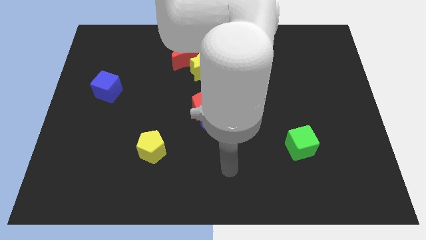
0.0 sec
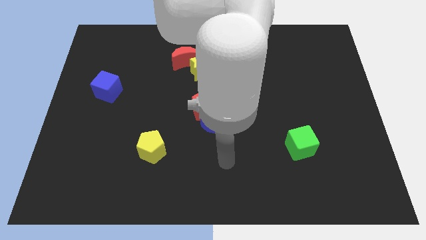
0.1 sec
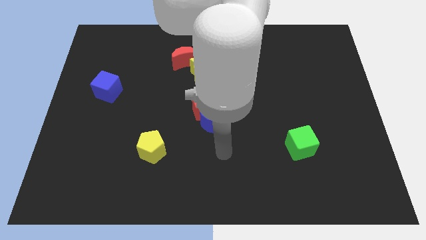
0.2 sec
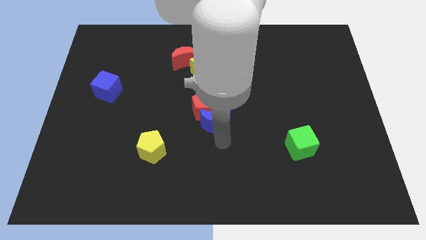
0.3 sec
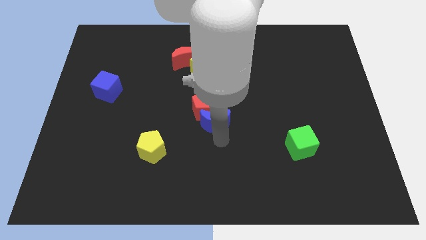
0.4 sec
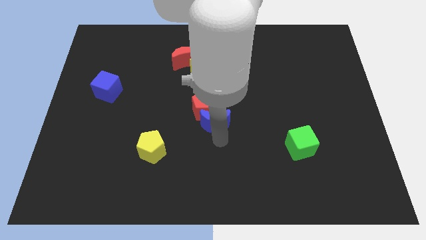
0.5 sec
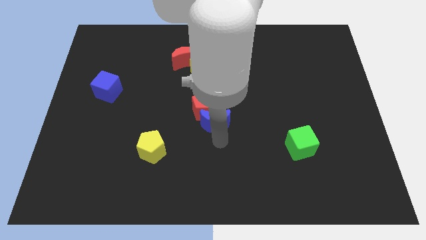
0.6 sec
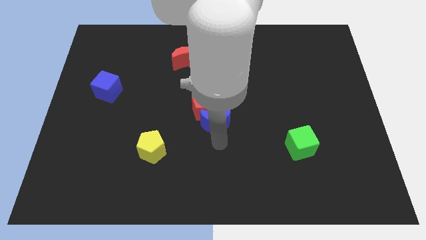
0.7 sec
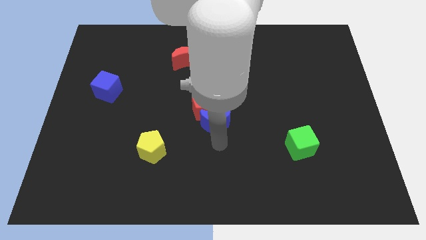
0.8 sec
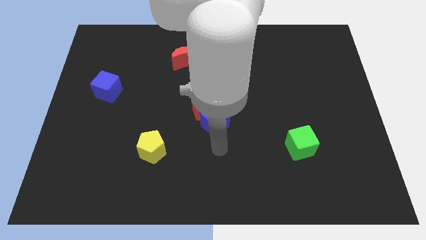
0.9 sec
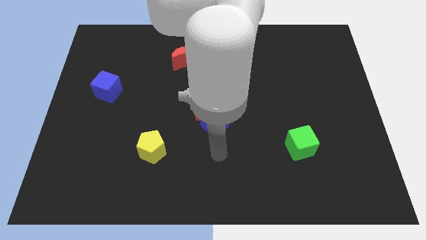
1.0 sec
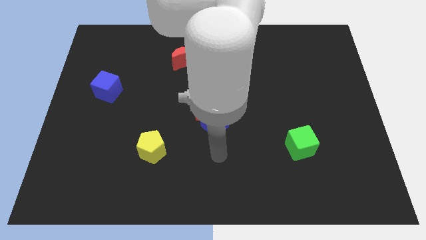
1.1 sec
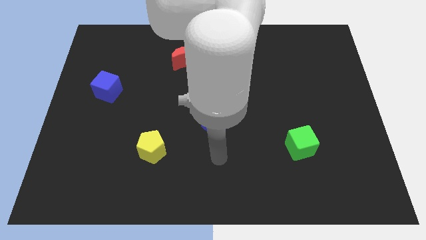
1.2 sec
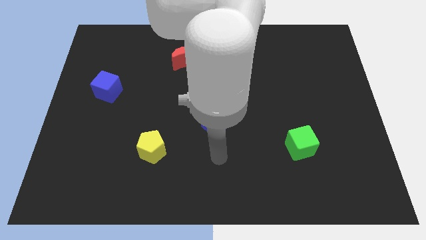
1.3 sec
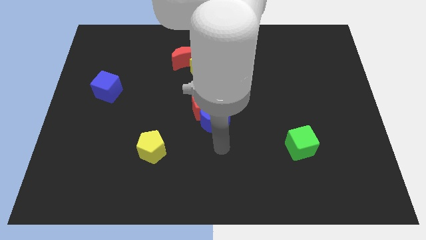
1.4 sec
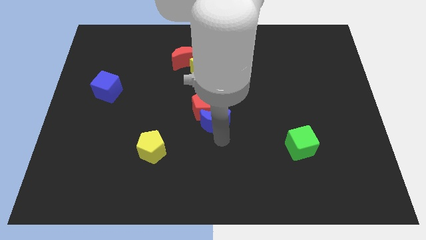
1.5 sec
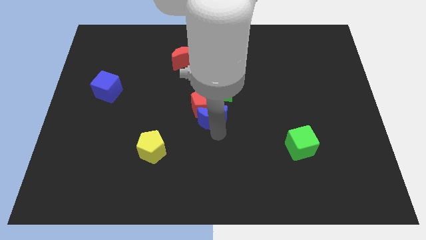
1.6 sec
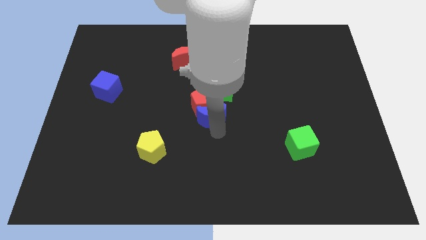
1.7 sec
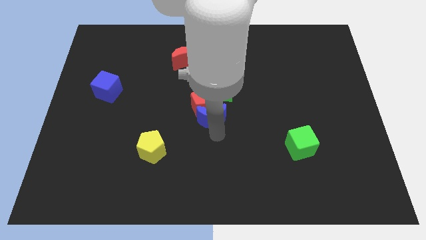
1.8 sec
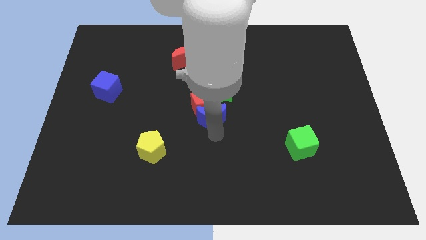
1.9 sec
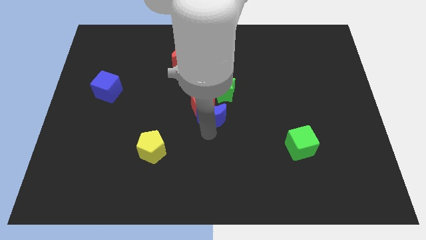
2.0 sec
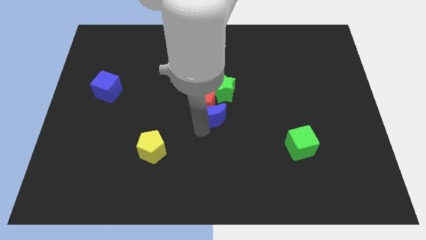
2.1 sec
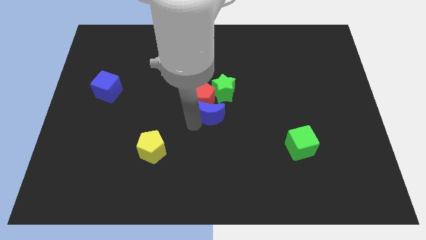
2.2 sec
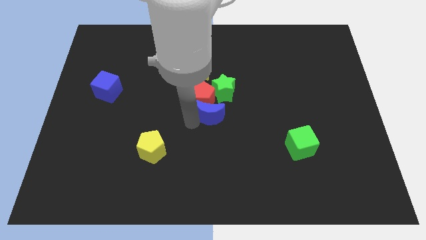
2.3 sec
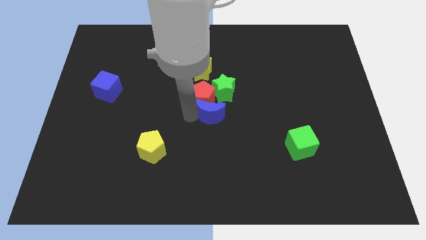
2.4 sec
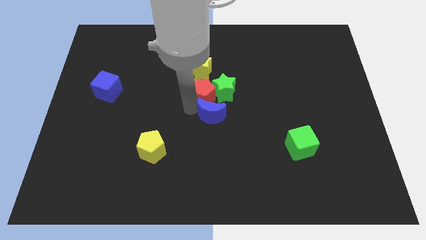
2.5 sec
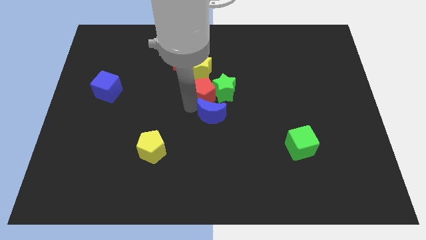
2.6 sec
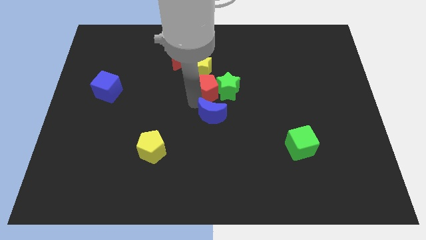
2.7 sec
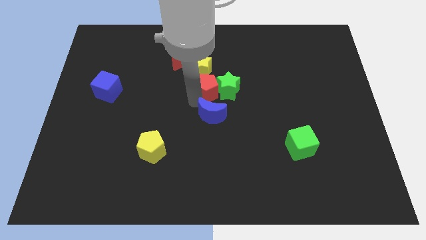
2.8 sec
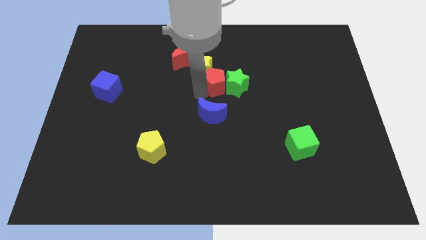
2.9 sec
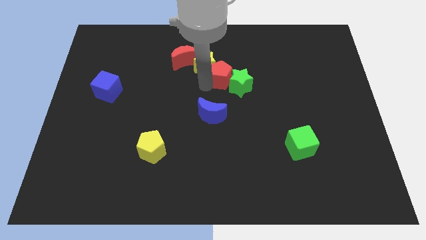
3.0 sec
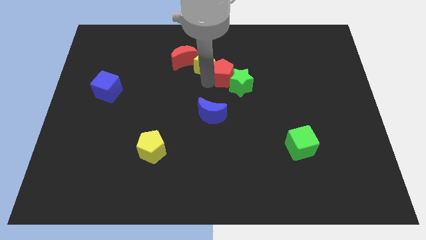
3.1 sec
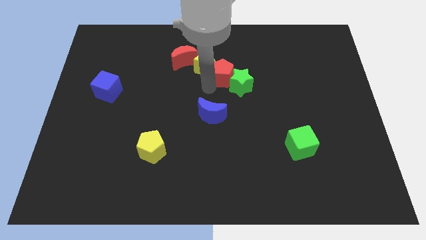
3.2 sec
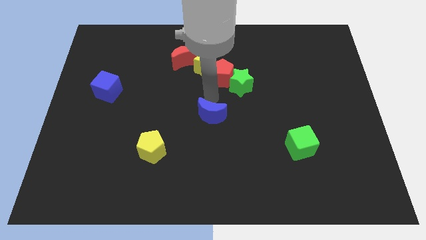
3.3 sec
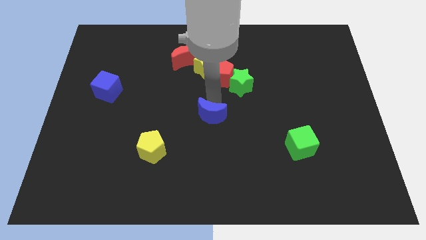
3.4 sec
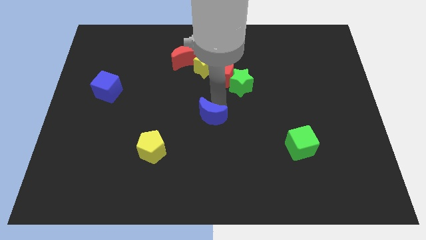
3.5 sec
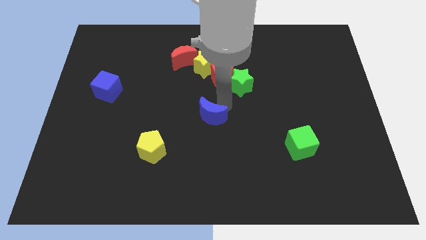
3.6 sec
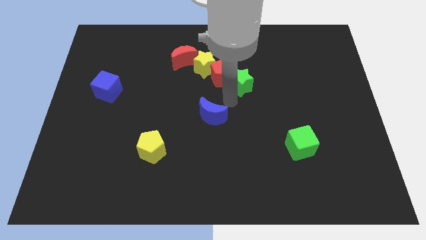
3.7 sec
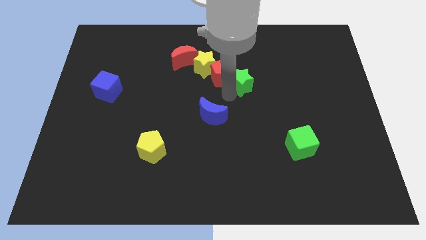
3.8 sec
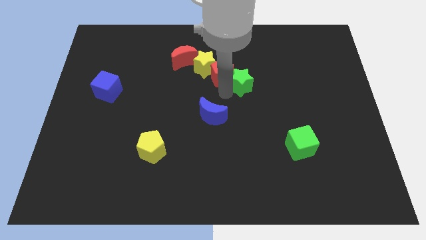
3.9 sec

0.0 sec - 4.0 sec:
push red pentagon in between yellow and green star

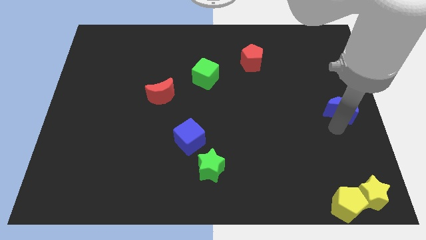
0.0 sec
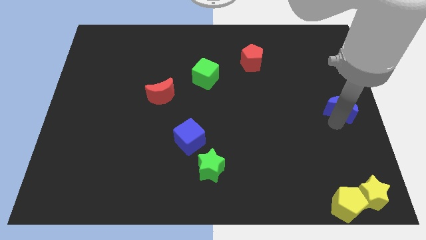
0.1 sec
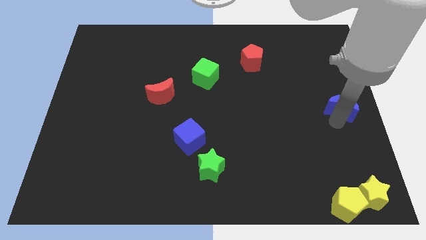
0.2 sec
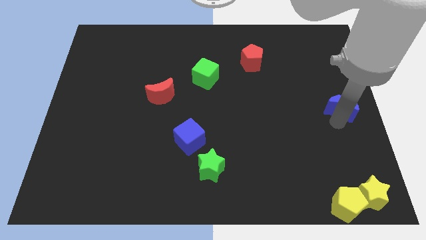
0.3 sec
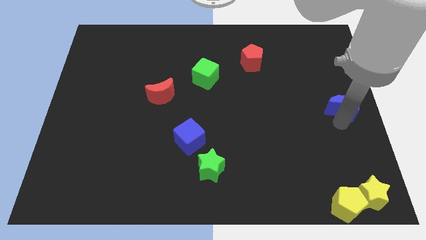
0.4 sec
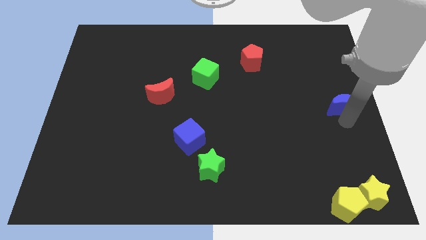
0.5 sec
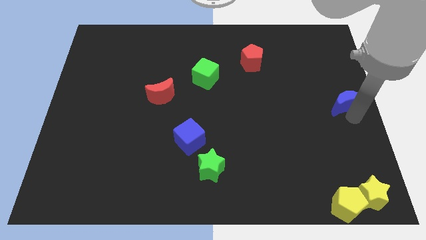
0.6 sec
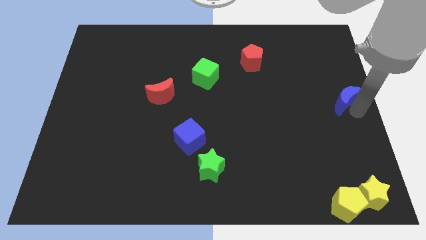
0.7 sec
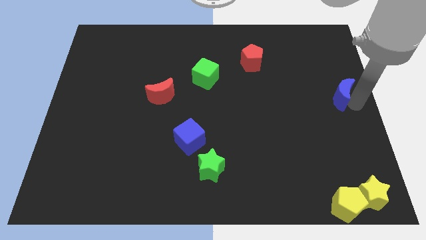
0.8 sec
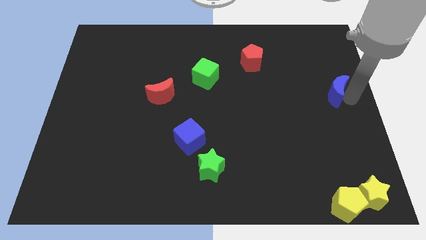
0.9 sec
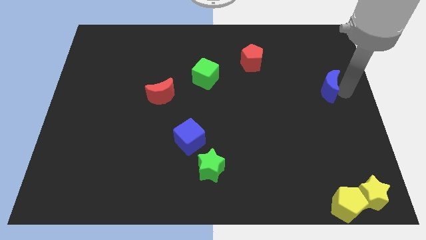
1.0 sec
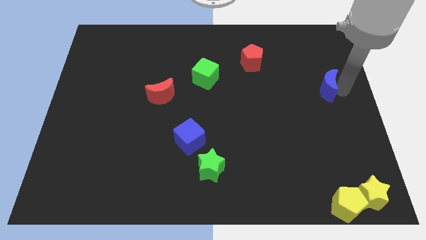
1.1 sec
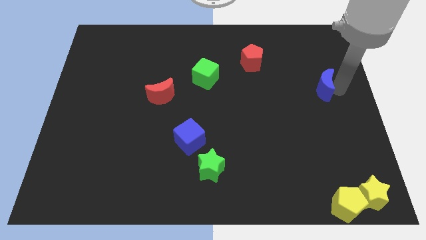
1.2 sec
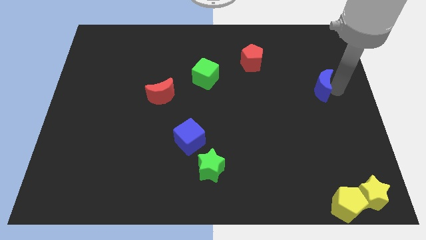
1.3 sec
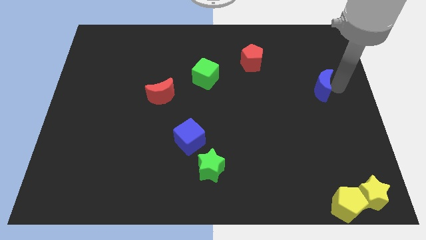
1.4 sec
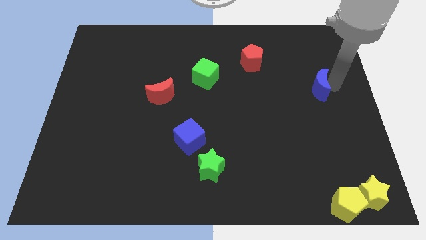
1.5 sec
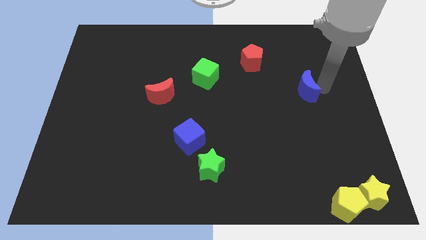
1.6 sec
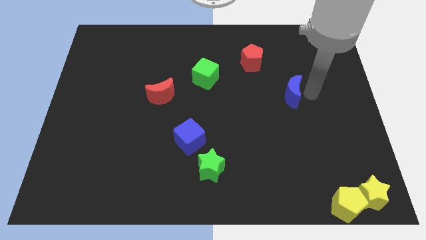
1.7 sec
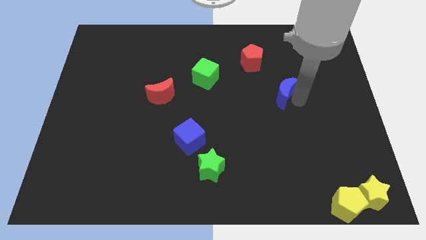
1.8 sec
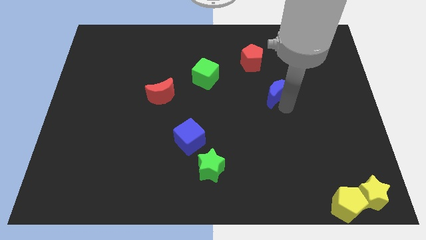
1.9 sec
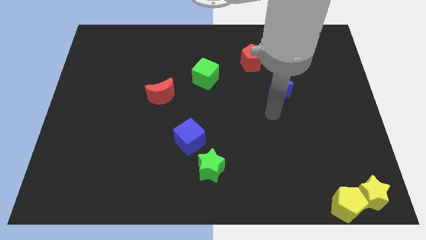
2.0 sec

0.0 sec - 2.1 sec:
move the blue crescent slightly left to the red pentagon

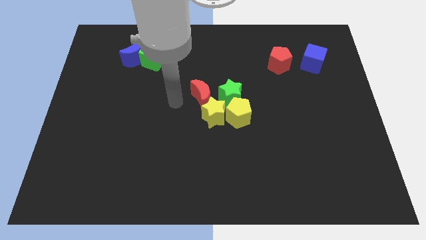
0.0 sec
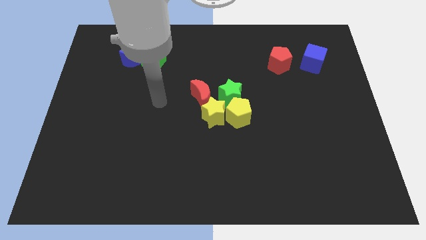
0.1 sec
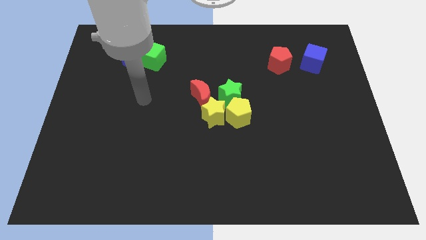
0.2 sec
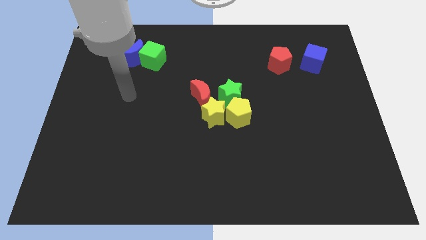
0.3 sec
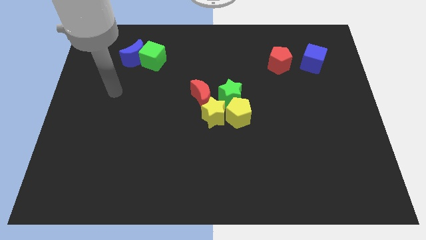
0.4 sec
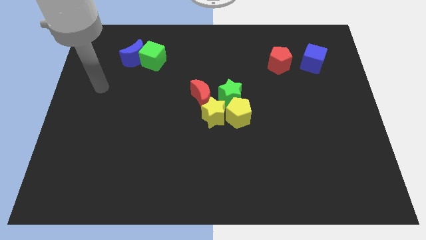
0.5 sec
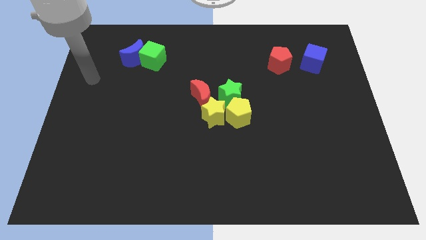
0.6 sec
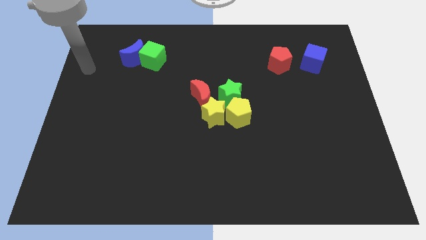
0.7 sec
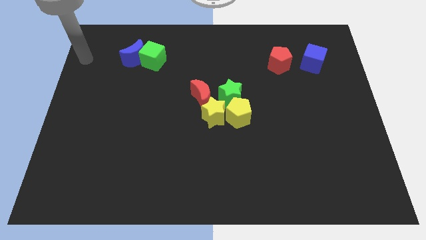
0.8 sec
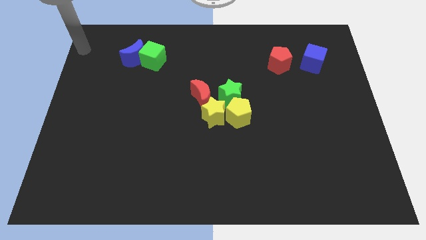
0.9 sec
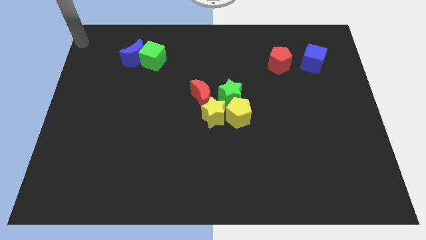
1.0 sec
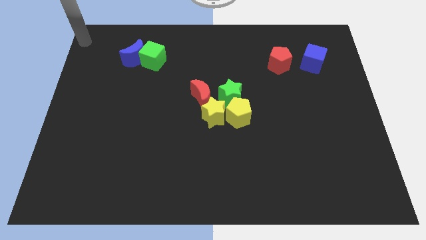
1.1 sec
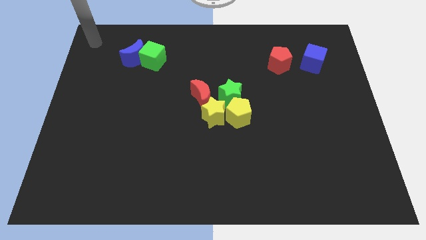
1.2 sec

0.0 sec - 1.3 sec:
take your hand to the top left corner of the board

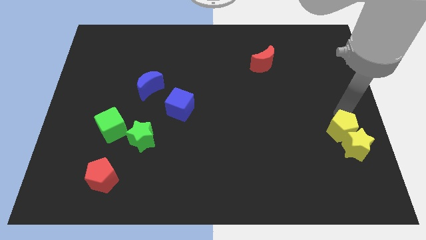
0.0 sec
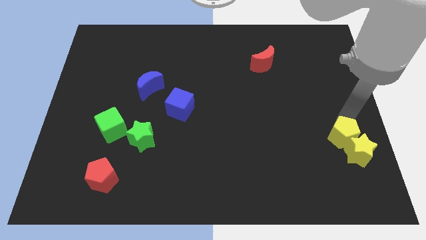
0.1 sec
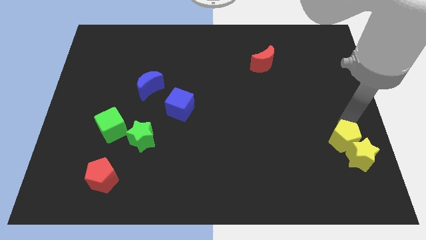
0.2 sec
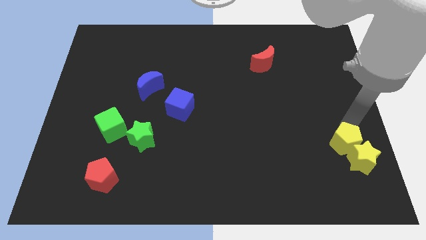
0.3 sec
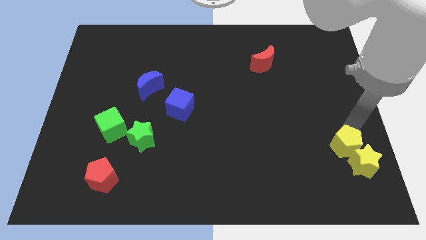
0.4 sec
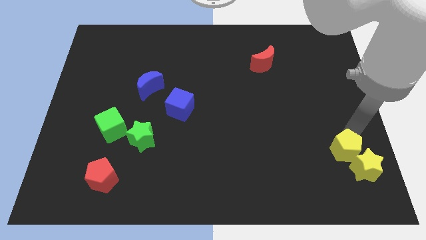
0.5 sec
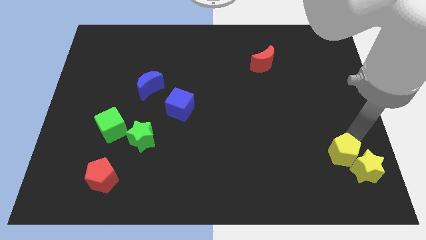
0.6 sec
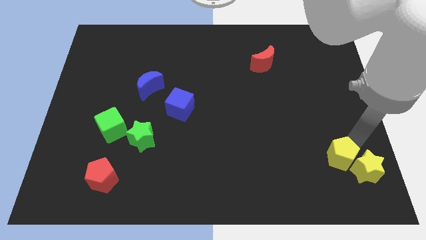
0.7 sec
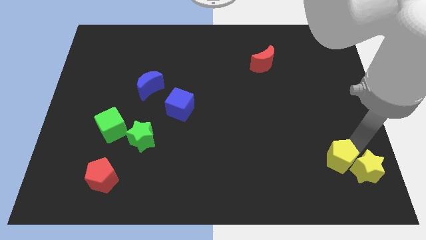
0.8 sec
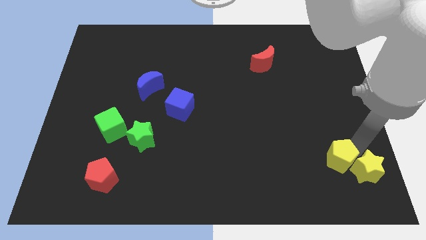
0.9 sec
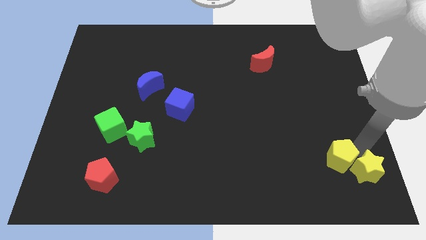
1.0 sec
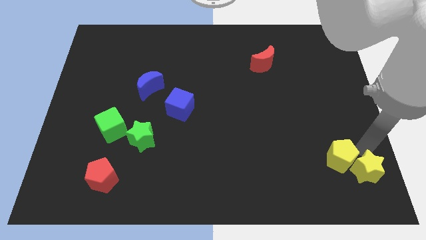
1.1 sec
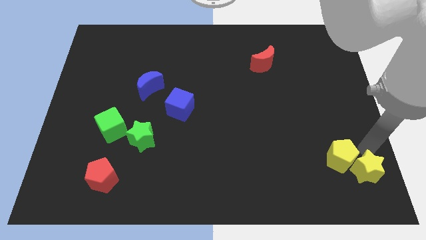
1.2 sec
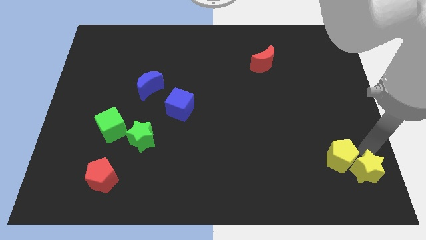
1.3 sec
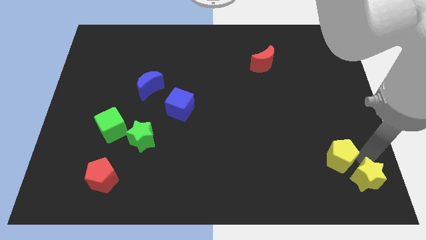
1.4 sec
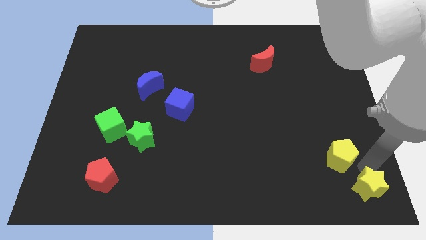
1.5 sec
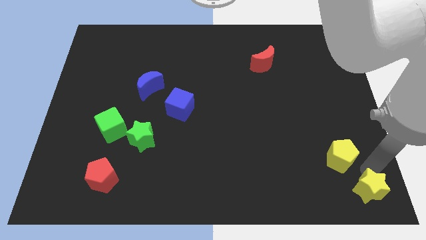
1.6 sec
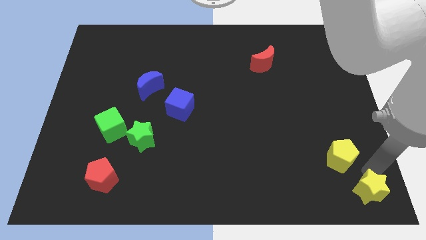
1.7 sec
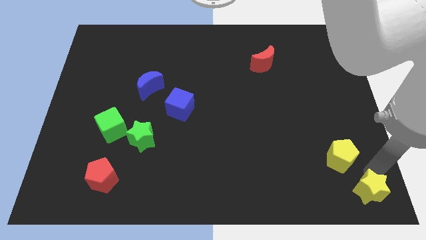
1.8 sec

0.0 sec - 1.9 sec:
move yellow blocks to the bottom
